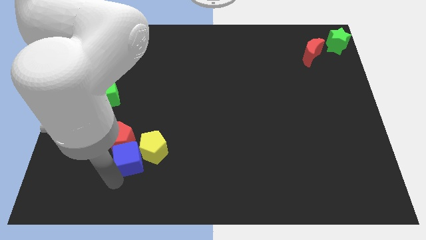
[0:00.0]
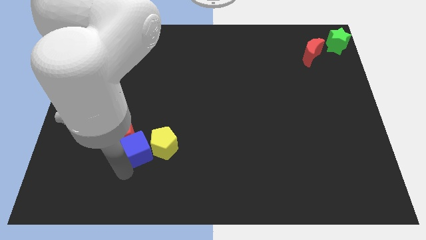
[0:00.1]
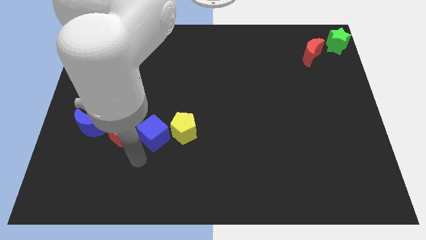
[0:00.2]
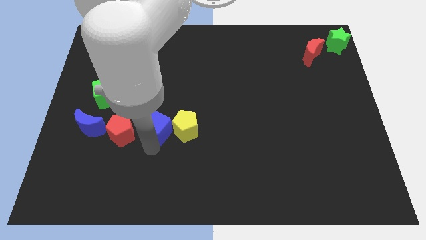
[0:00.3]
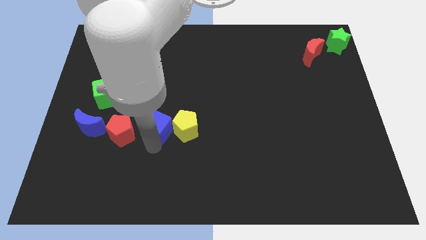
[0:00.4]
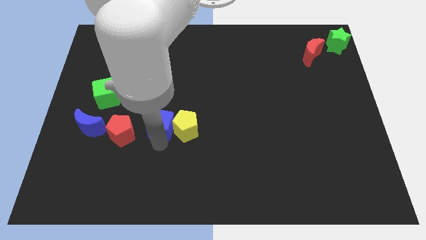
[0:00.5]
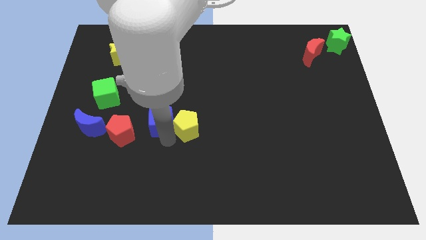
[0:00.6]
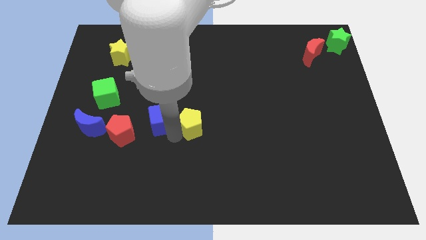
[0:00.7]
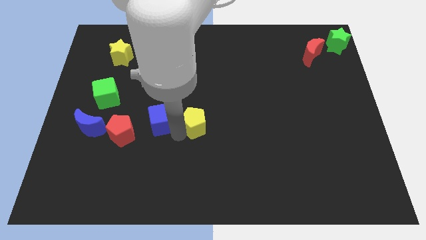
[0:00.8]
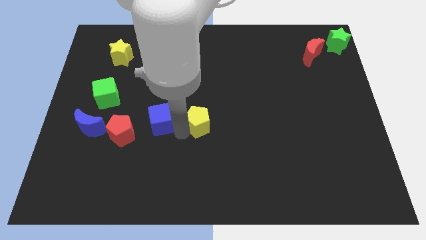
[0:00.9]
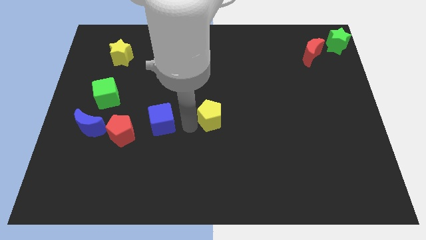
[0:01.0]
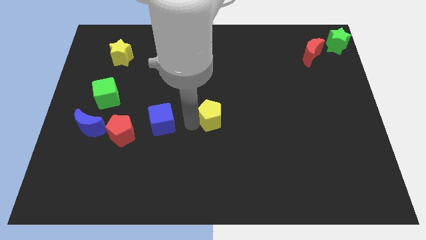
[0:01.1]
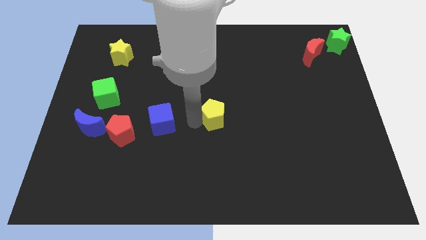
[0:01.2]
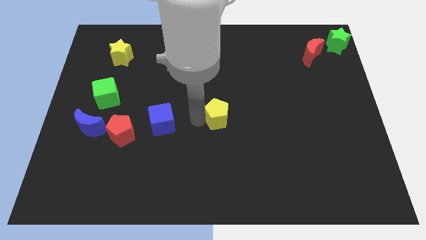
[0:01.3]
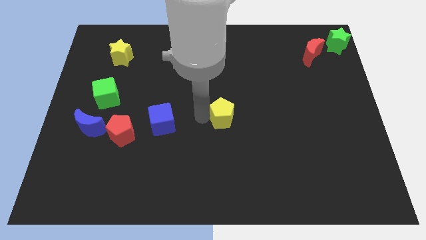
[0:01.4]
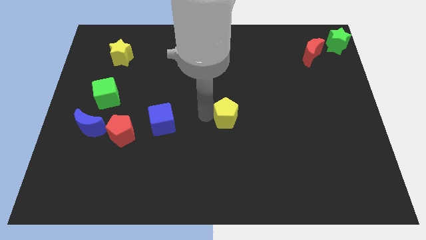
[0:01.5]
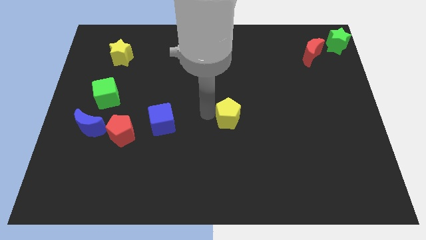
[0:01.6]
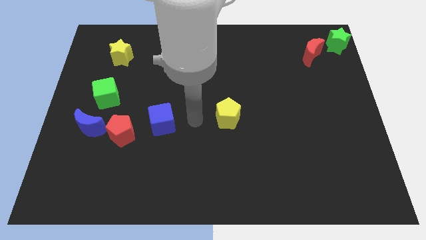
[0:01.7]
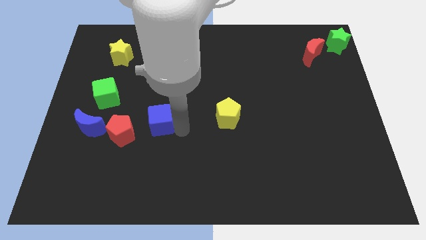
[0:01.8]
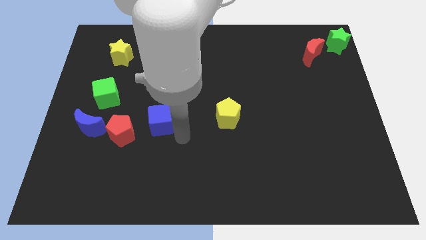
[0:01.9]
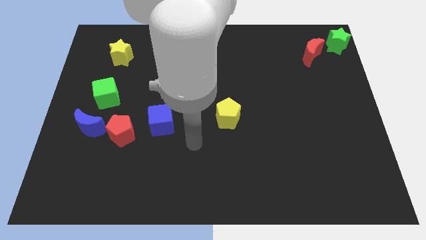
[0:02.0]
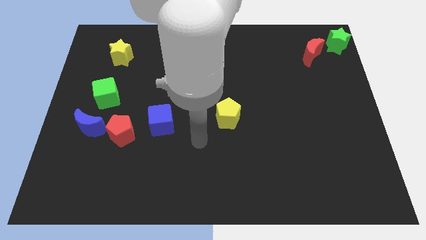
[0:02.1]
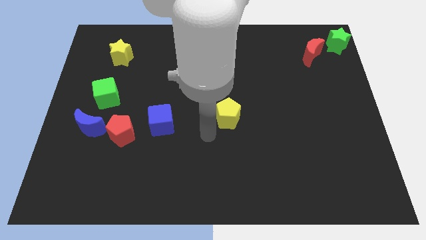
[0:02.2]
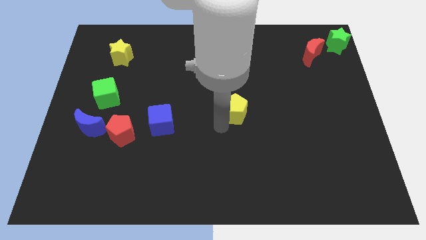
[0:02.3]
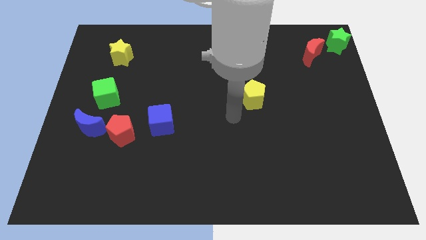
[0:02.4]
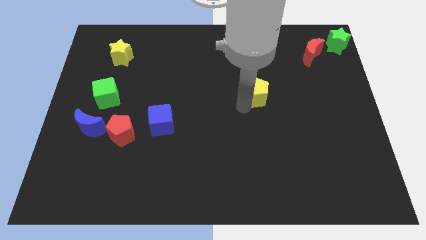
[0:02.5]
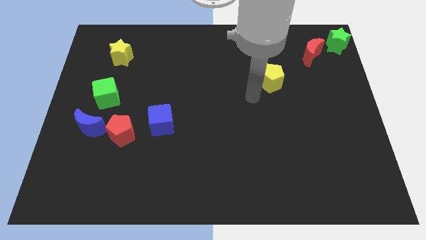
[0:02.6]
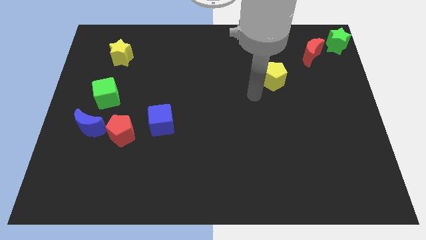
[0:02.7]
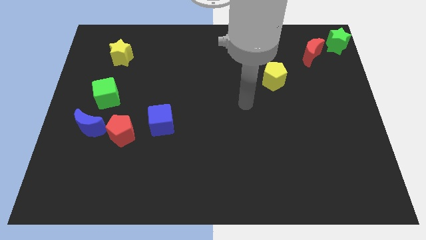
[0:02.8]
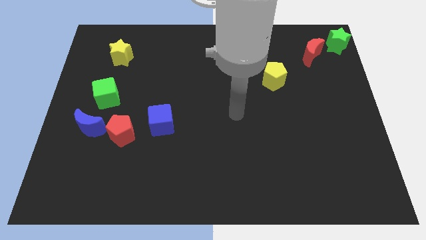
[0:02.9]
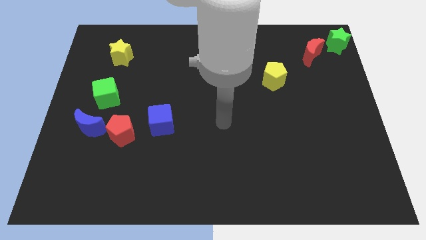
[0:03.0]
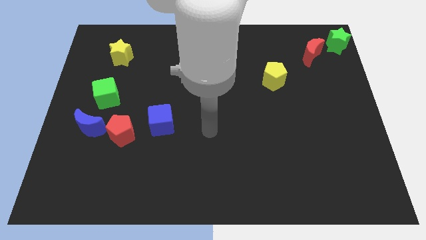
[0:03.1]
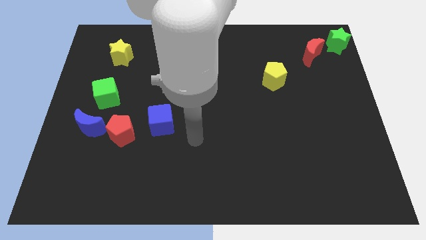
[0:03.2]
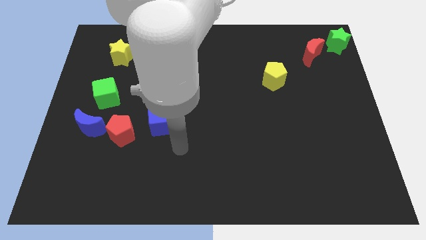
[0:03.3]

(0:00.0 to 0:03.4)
push the yellow pentagon towards the red crescent

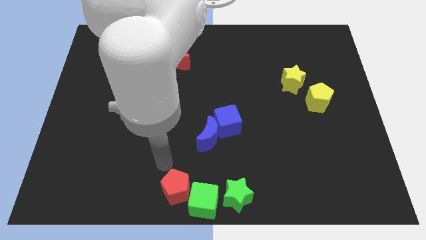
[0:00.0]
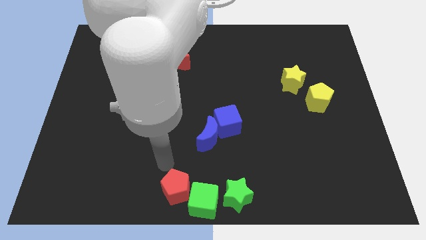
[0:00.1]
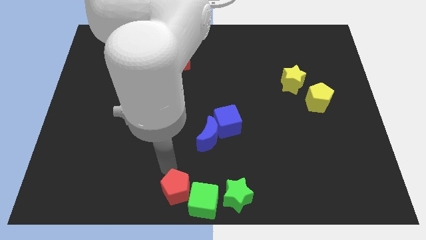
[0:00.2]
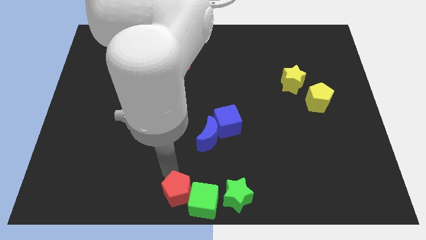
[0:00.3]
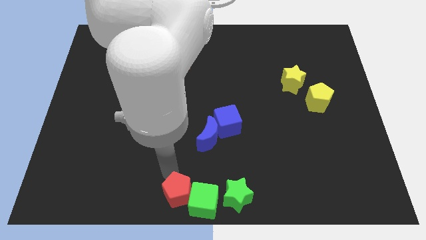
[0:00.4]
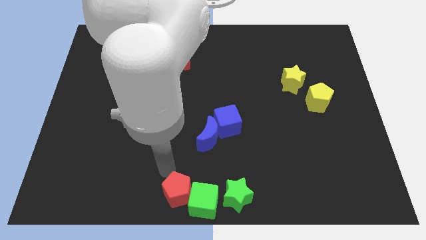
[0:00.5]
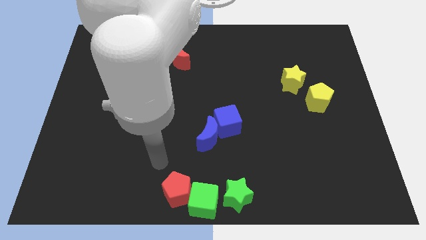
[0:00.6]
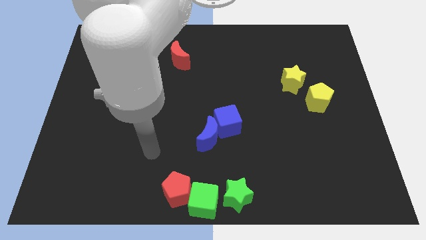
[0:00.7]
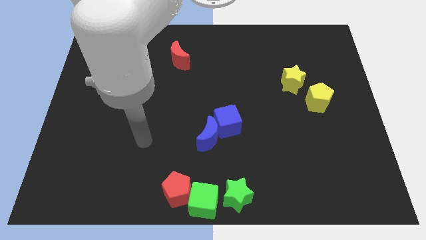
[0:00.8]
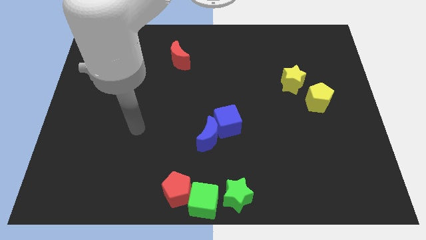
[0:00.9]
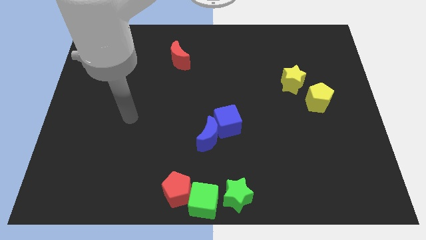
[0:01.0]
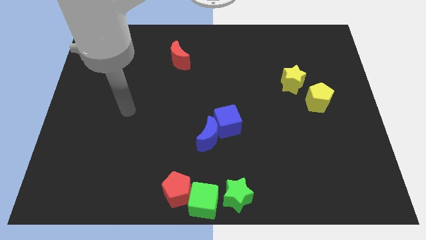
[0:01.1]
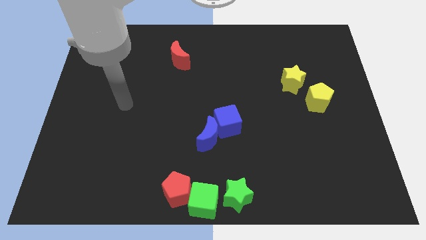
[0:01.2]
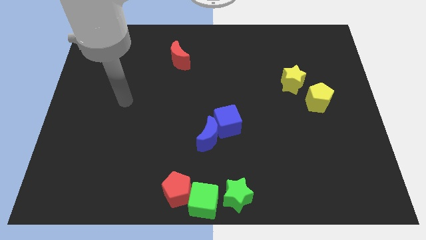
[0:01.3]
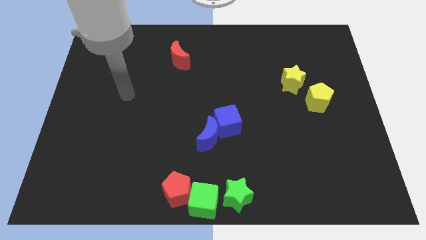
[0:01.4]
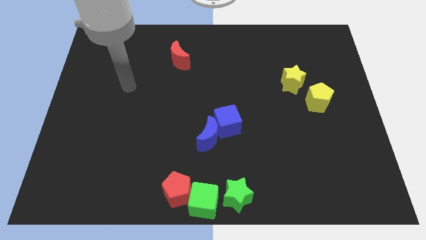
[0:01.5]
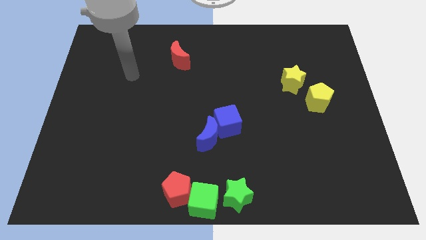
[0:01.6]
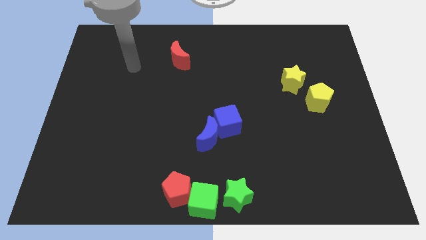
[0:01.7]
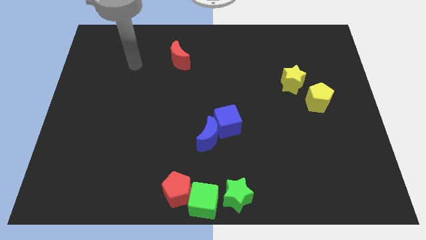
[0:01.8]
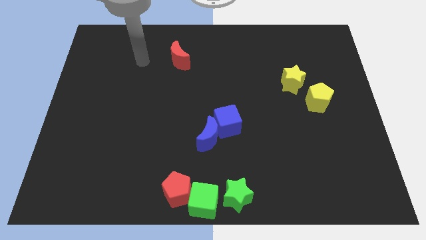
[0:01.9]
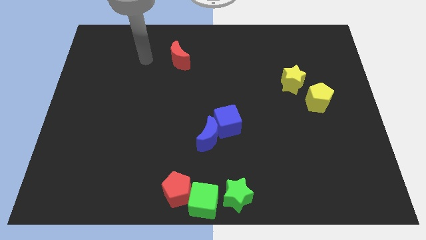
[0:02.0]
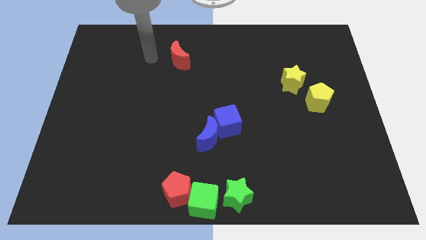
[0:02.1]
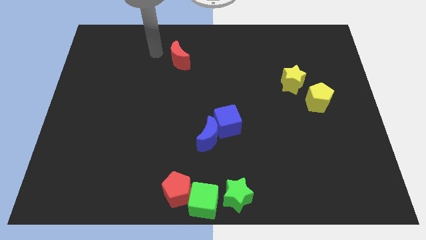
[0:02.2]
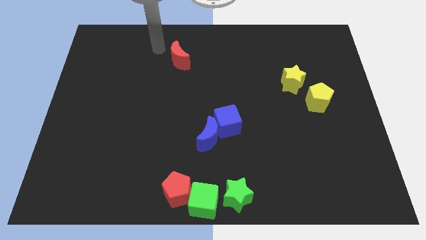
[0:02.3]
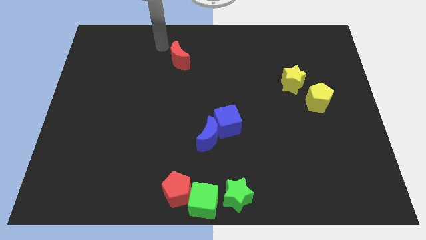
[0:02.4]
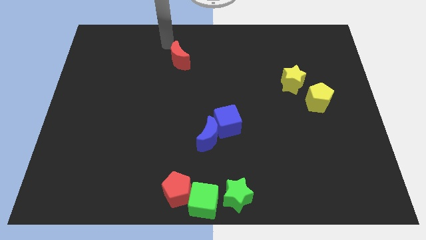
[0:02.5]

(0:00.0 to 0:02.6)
move the arm towards the red crescent

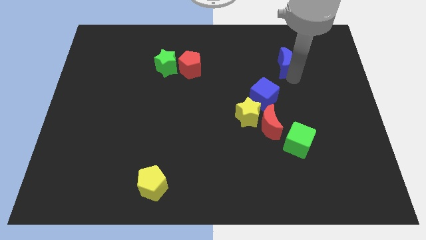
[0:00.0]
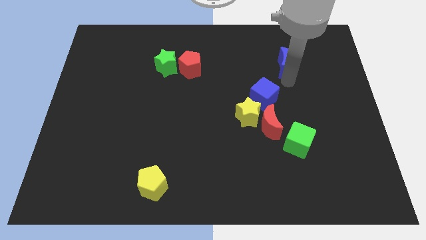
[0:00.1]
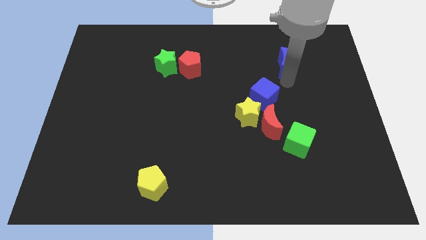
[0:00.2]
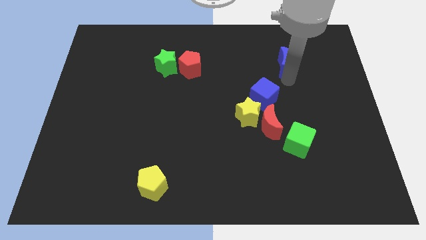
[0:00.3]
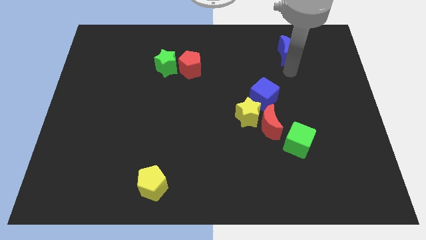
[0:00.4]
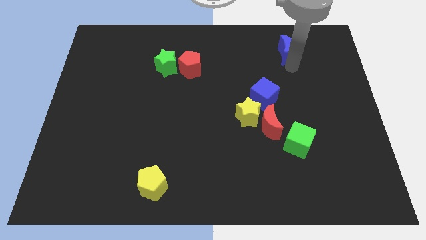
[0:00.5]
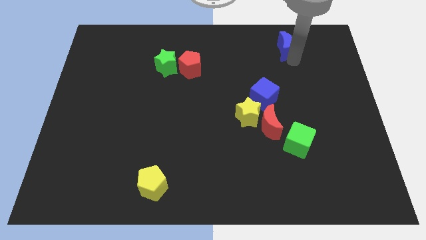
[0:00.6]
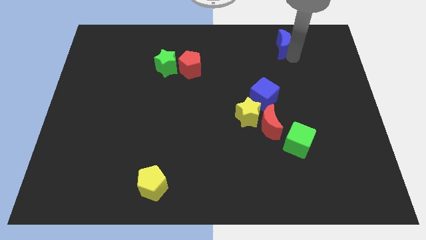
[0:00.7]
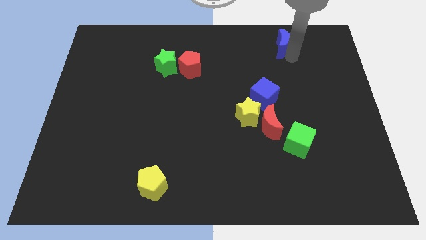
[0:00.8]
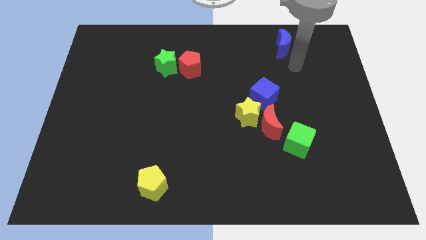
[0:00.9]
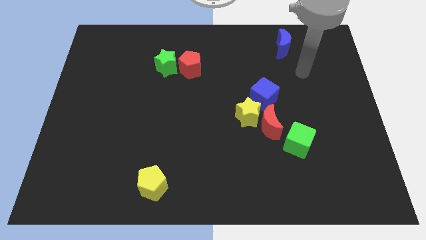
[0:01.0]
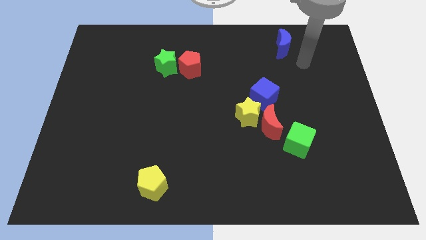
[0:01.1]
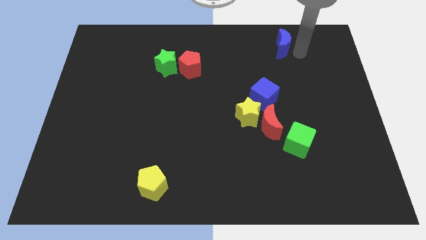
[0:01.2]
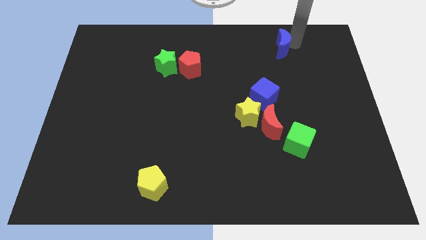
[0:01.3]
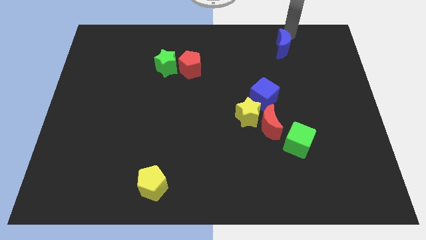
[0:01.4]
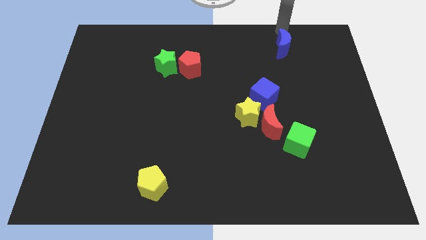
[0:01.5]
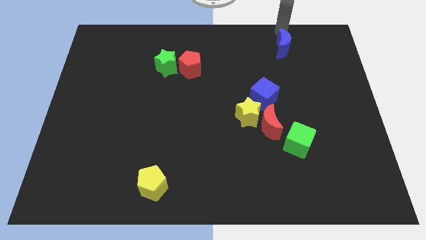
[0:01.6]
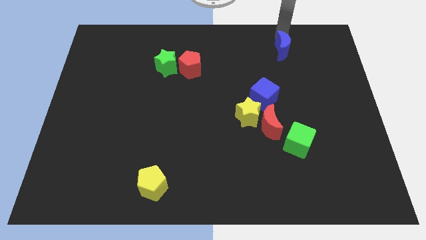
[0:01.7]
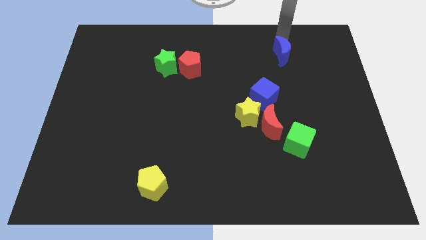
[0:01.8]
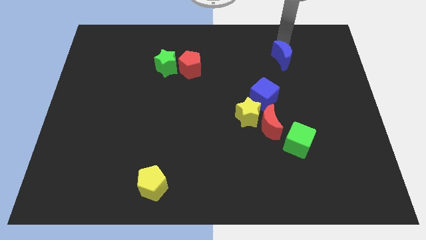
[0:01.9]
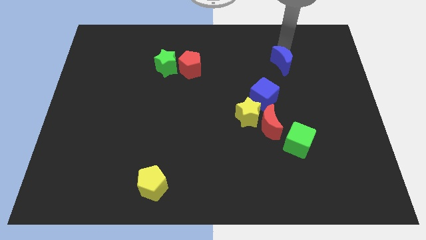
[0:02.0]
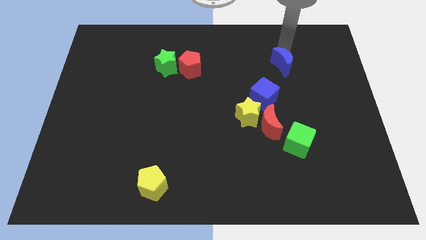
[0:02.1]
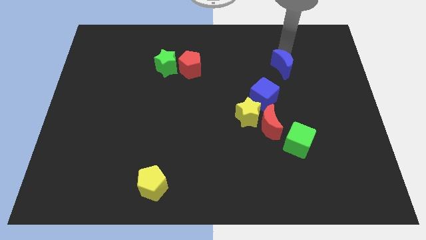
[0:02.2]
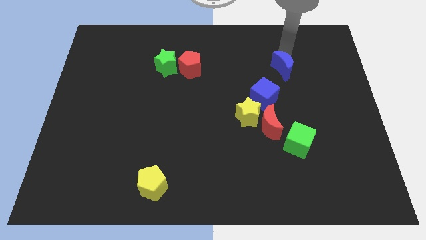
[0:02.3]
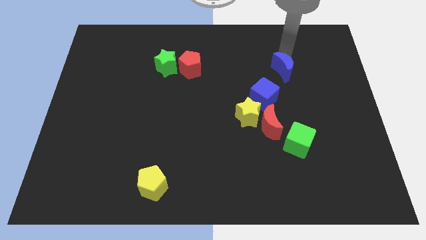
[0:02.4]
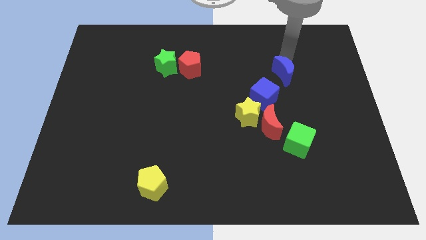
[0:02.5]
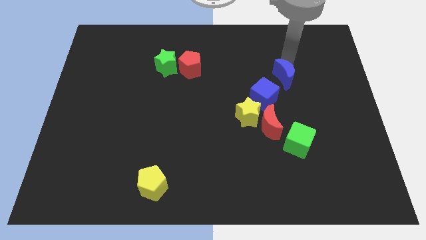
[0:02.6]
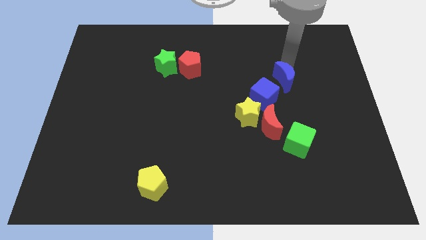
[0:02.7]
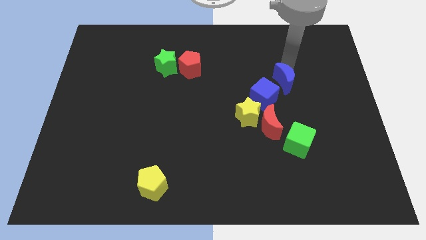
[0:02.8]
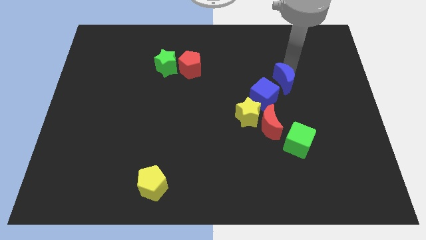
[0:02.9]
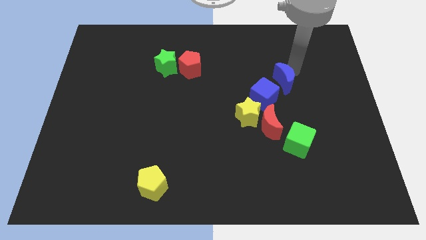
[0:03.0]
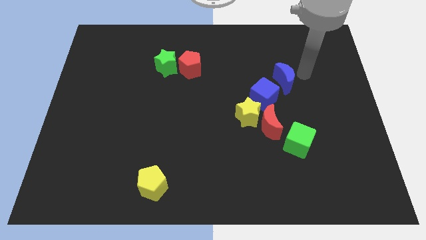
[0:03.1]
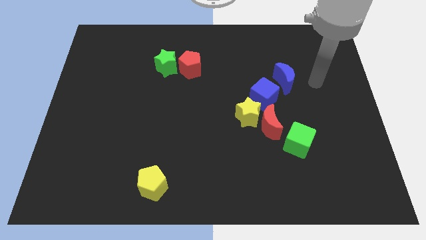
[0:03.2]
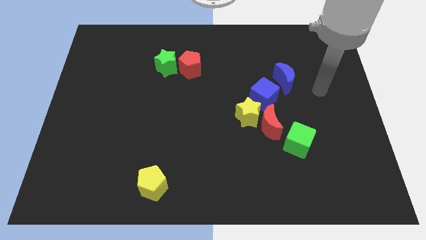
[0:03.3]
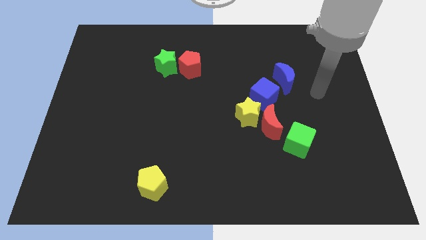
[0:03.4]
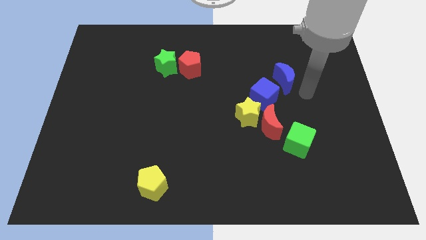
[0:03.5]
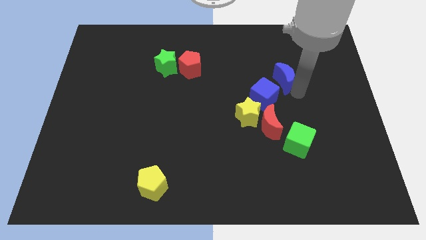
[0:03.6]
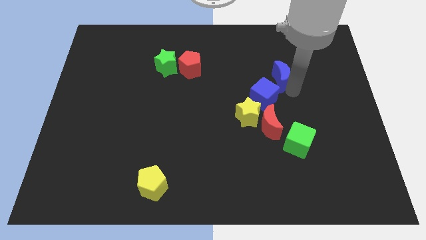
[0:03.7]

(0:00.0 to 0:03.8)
move blue crescent towards the blue cube
